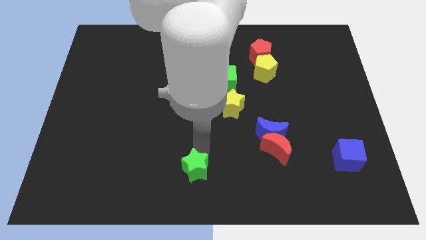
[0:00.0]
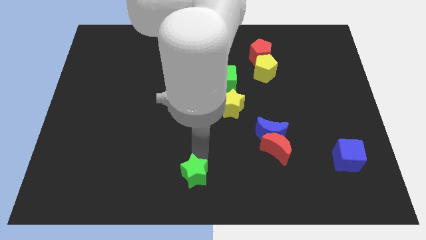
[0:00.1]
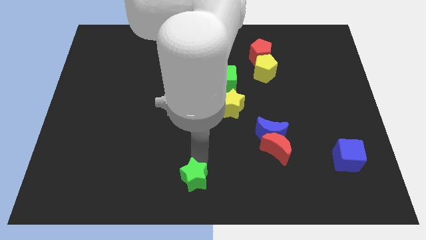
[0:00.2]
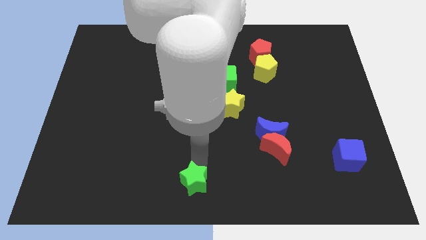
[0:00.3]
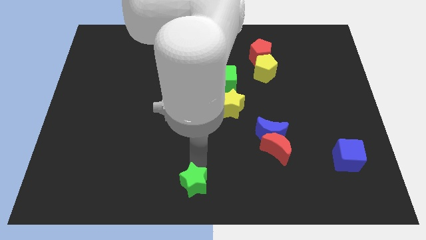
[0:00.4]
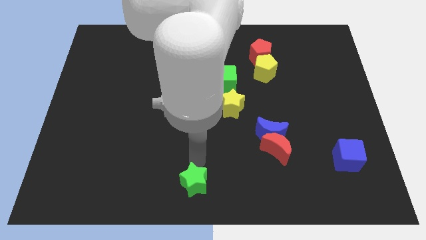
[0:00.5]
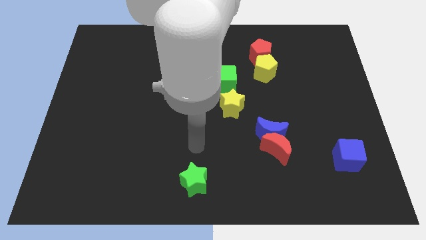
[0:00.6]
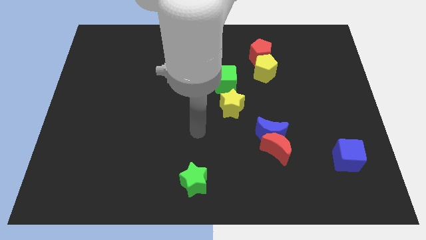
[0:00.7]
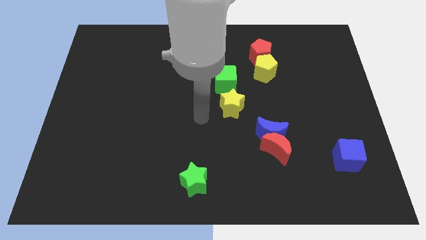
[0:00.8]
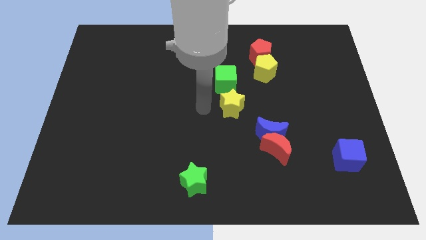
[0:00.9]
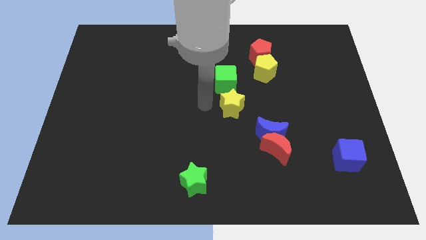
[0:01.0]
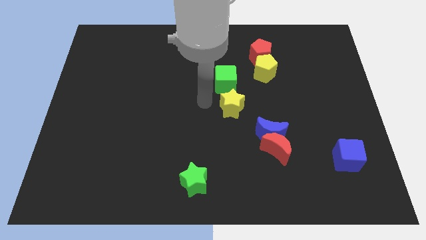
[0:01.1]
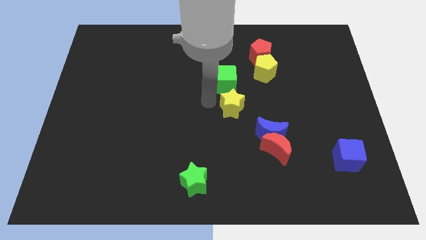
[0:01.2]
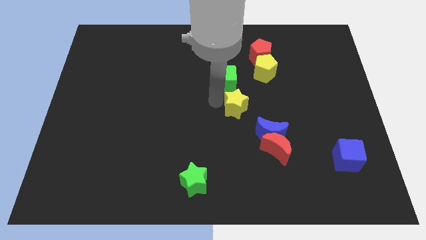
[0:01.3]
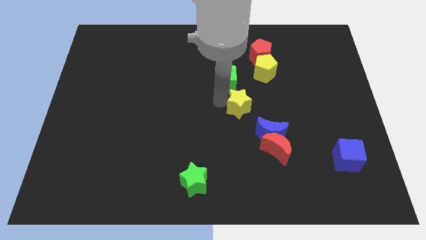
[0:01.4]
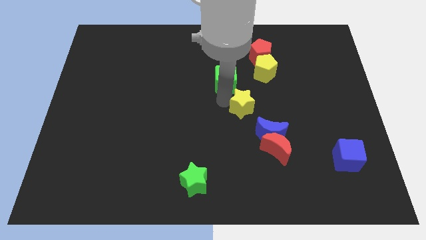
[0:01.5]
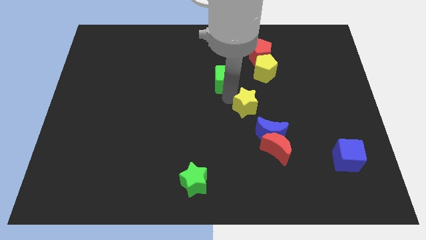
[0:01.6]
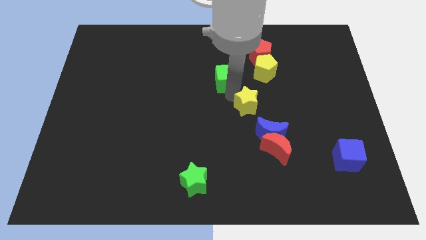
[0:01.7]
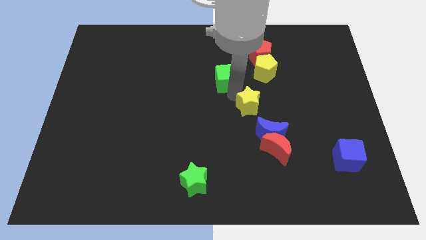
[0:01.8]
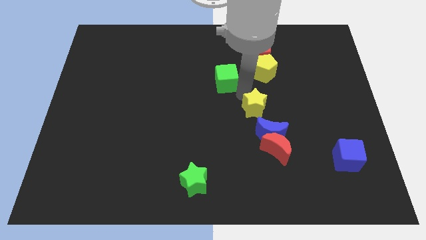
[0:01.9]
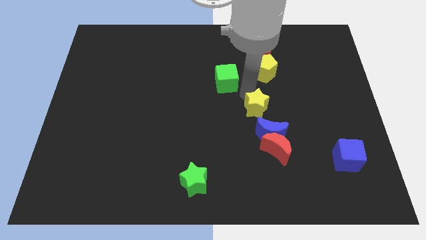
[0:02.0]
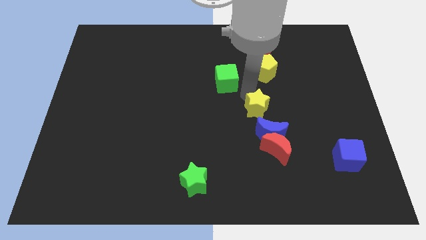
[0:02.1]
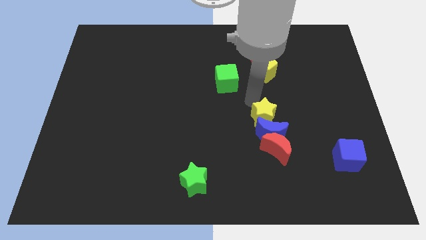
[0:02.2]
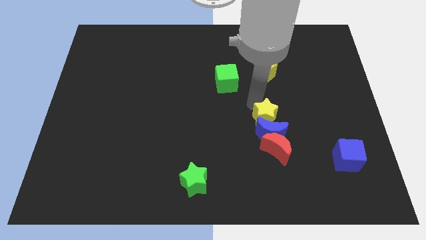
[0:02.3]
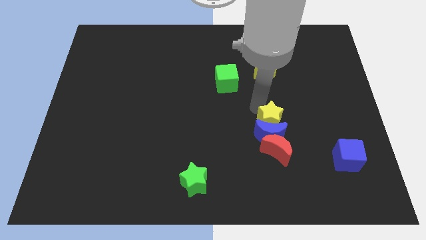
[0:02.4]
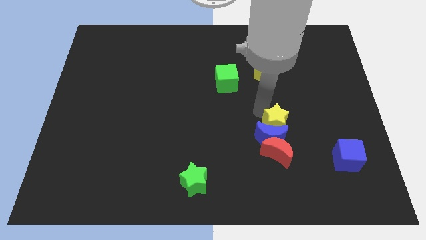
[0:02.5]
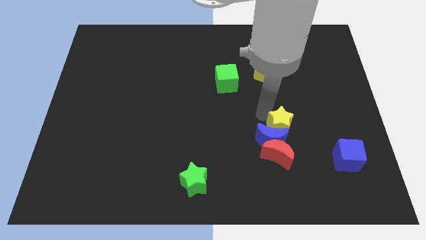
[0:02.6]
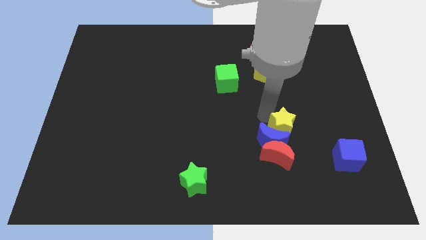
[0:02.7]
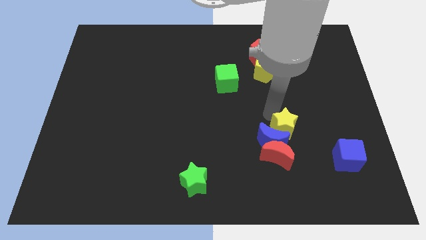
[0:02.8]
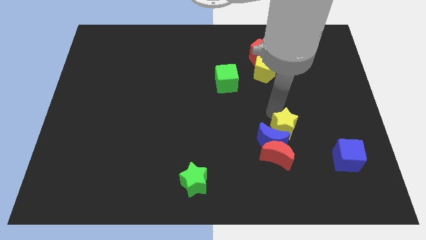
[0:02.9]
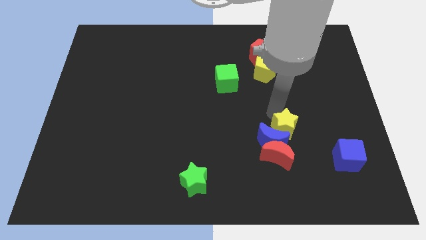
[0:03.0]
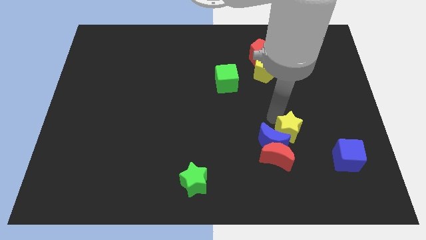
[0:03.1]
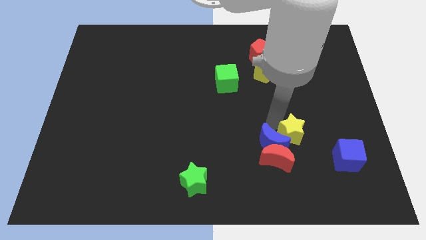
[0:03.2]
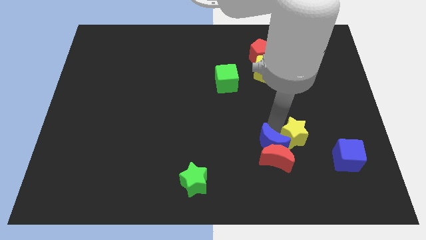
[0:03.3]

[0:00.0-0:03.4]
move the yellow star above the blue moon

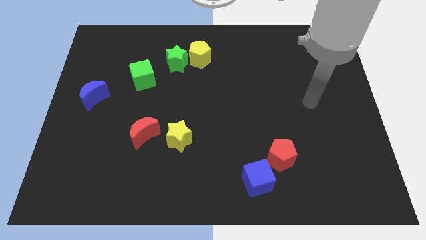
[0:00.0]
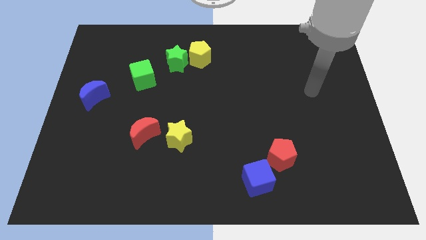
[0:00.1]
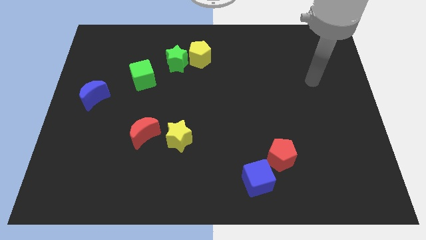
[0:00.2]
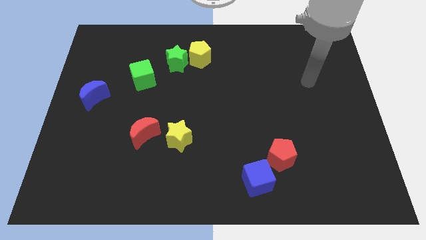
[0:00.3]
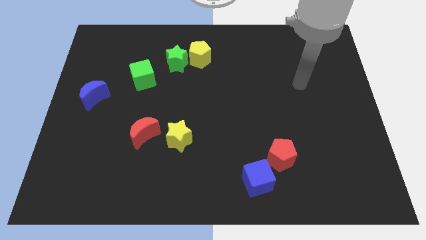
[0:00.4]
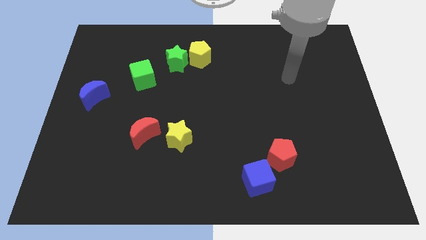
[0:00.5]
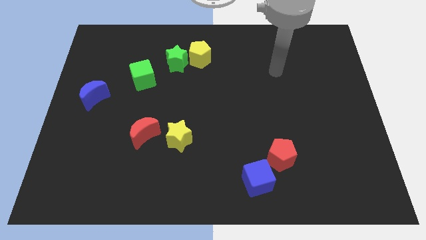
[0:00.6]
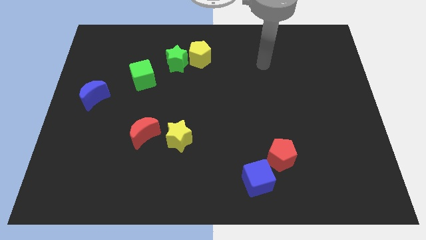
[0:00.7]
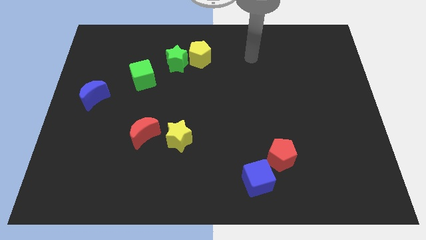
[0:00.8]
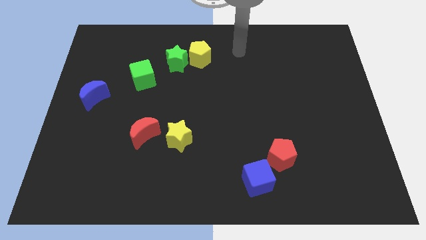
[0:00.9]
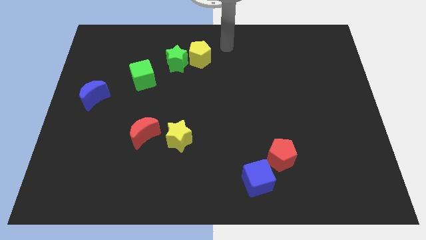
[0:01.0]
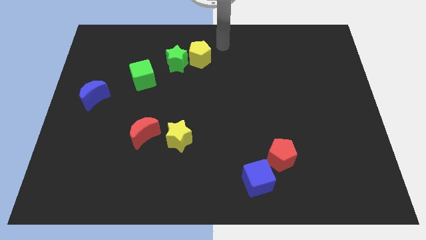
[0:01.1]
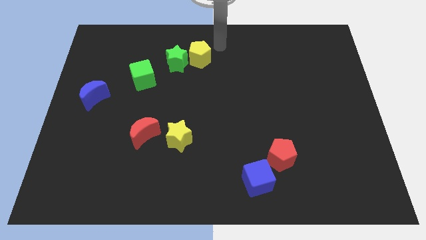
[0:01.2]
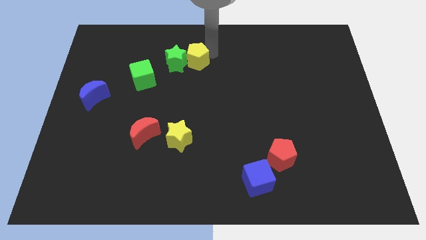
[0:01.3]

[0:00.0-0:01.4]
place the arm into the yellow pentagon

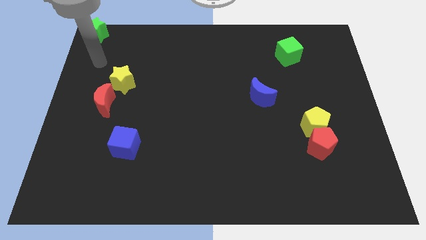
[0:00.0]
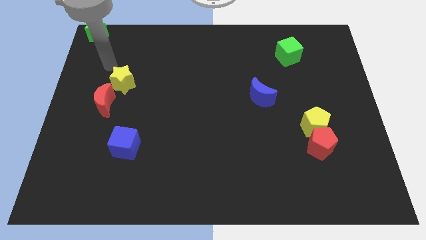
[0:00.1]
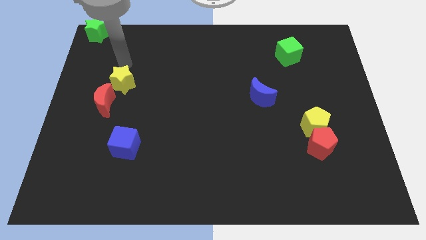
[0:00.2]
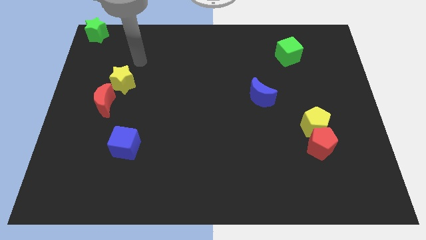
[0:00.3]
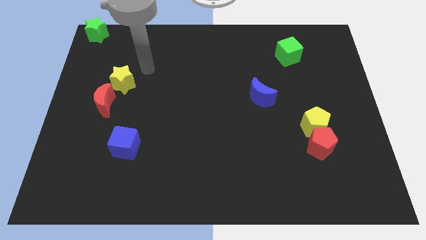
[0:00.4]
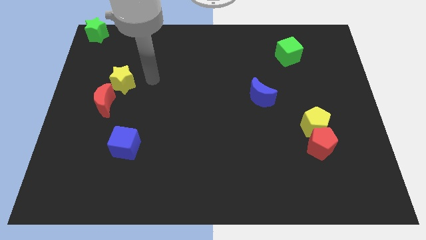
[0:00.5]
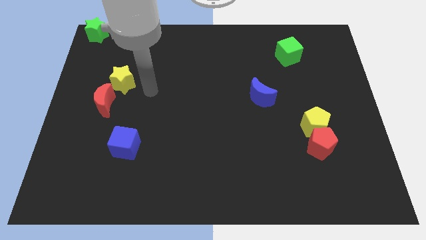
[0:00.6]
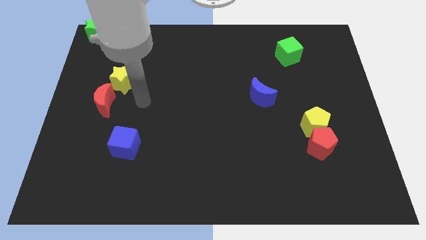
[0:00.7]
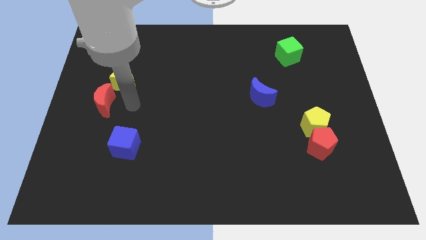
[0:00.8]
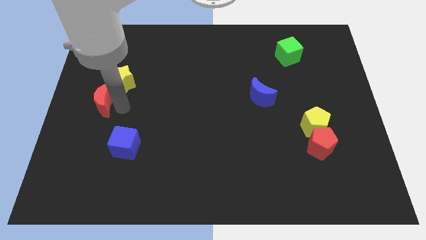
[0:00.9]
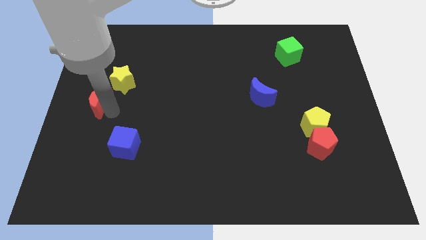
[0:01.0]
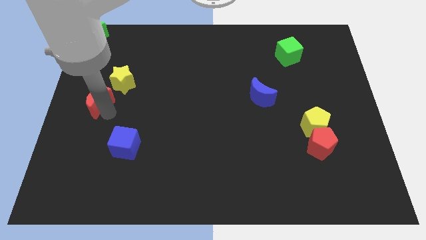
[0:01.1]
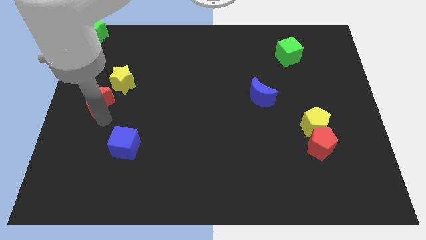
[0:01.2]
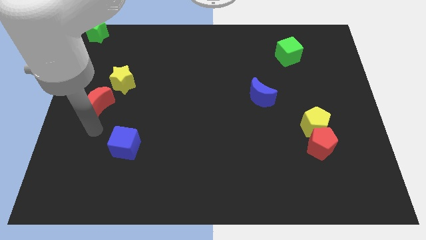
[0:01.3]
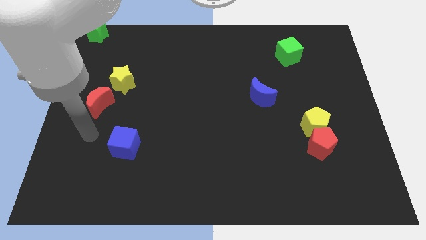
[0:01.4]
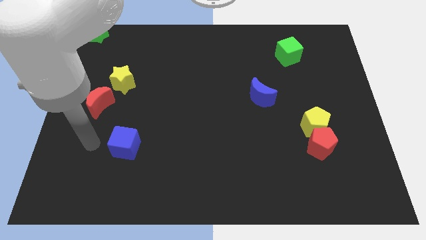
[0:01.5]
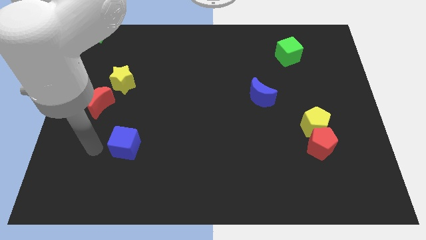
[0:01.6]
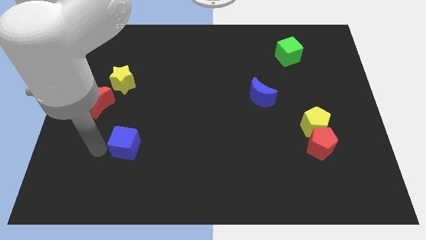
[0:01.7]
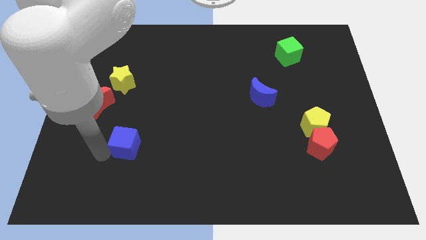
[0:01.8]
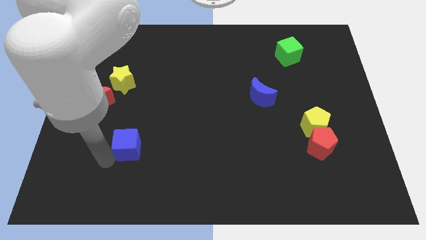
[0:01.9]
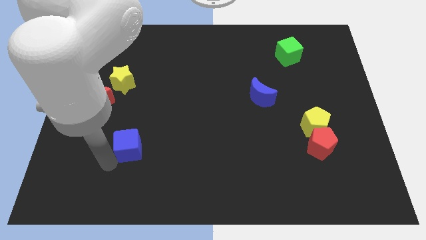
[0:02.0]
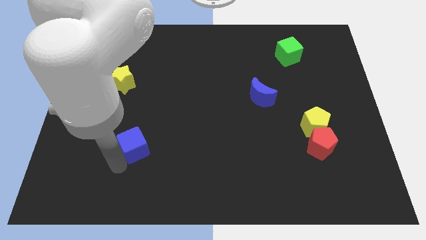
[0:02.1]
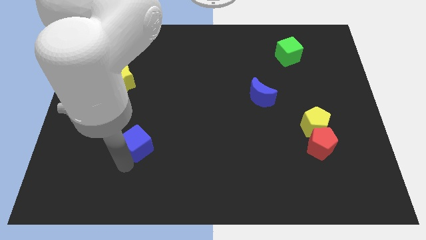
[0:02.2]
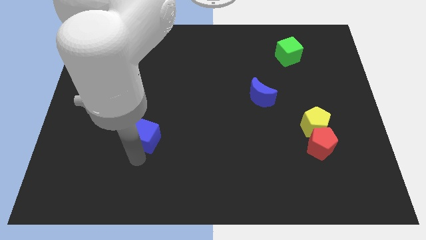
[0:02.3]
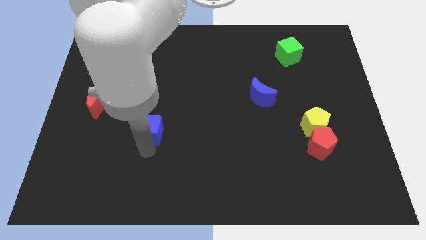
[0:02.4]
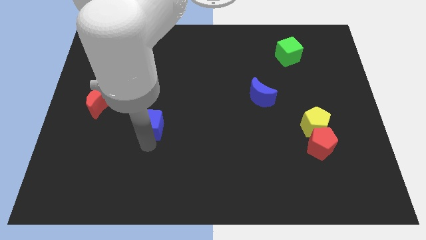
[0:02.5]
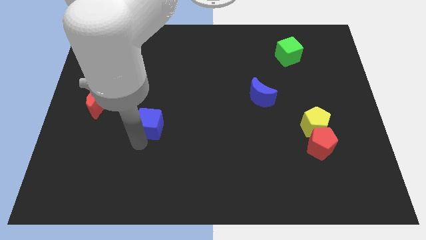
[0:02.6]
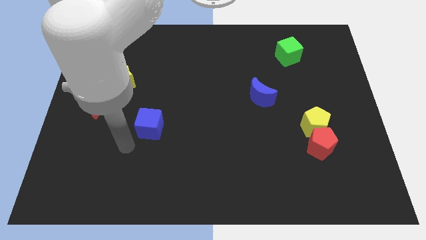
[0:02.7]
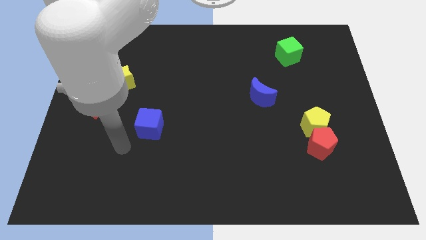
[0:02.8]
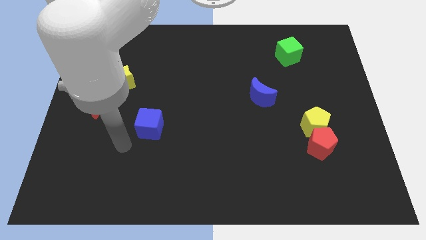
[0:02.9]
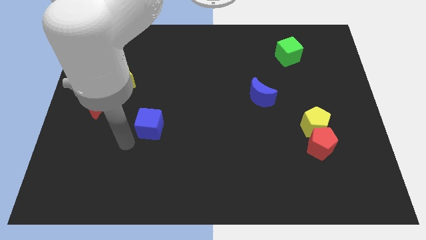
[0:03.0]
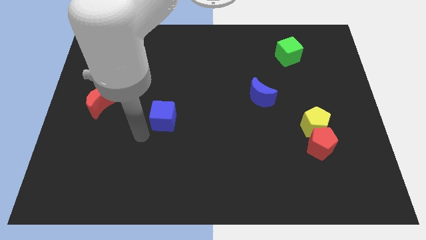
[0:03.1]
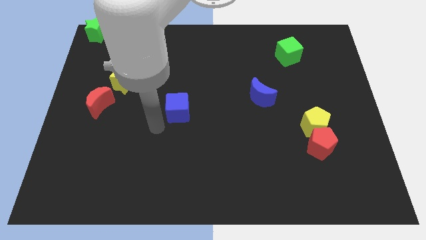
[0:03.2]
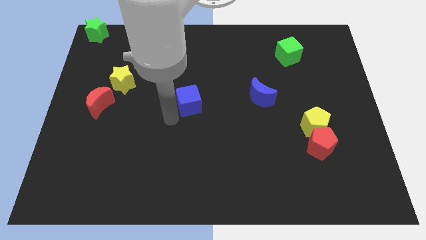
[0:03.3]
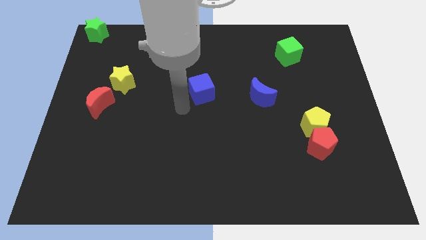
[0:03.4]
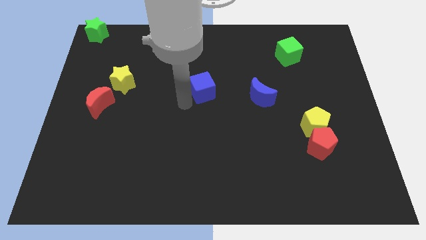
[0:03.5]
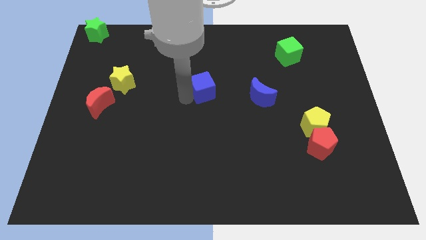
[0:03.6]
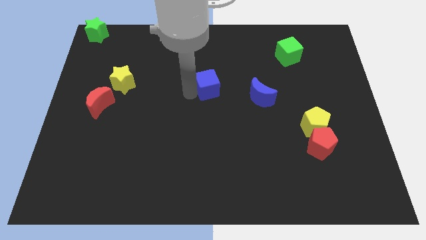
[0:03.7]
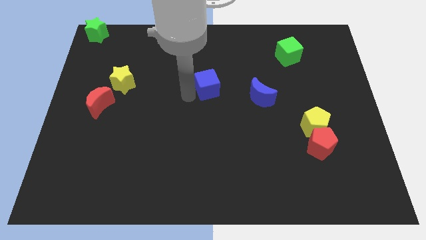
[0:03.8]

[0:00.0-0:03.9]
place the blue cube to the left of the blue moon

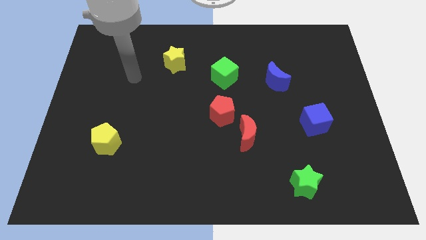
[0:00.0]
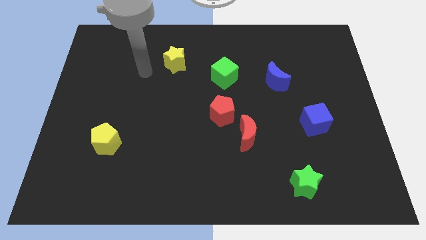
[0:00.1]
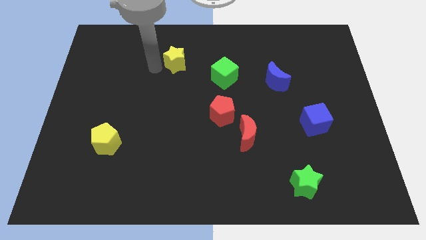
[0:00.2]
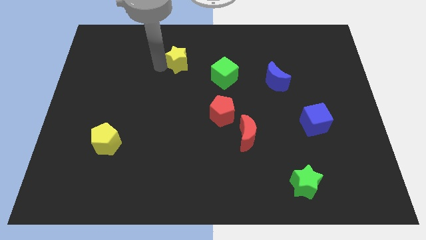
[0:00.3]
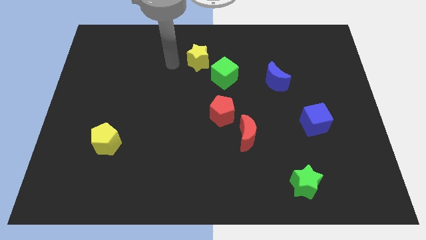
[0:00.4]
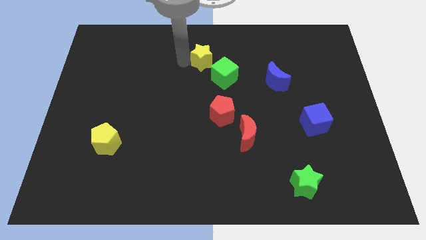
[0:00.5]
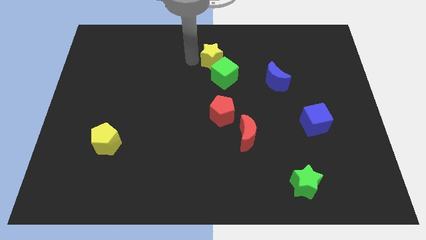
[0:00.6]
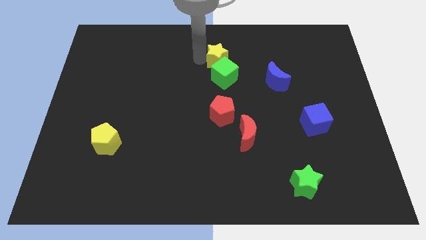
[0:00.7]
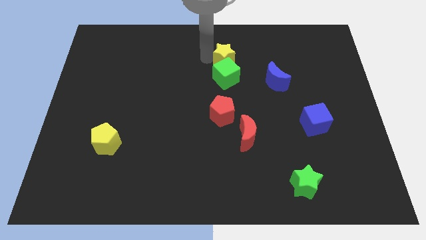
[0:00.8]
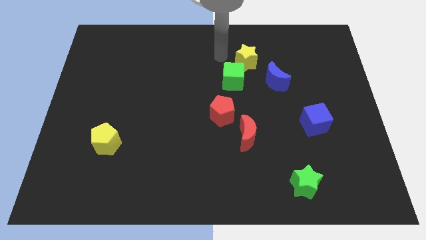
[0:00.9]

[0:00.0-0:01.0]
move yellow star above green cube
